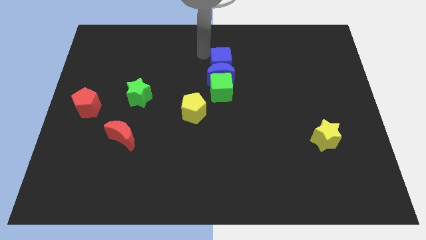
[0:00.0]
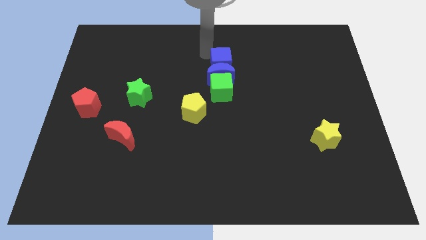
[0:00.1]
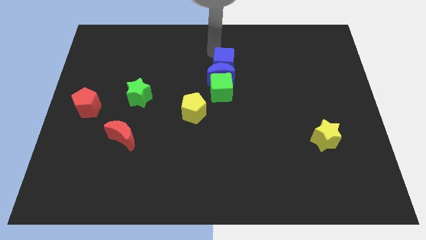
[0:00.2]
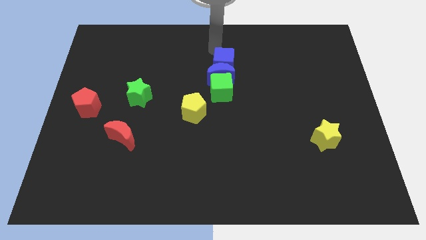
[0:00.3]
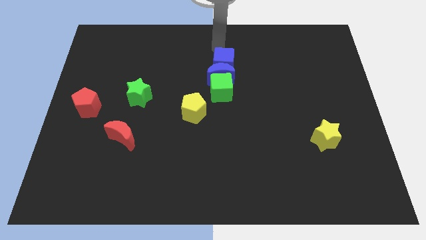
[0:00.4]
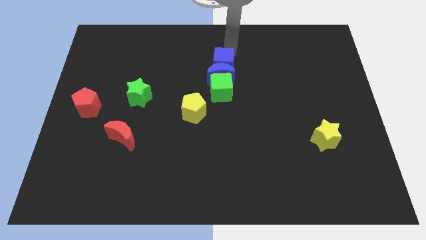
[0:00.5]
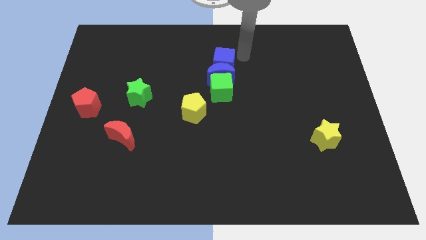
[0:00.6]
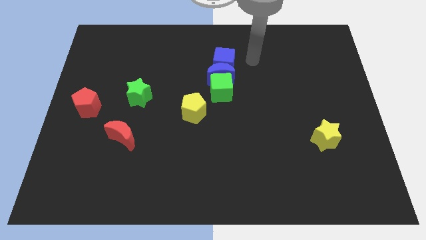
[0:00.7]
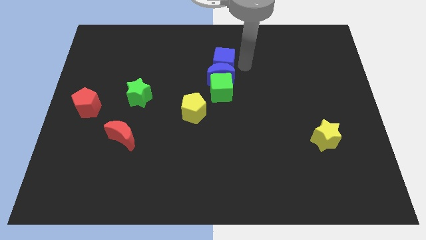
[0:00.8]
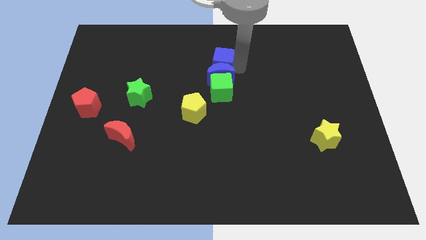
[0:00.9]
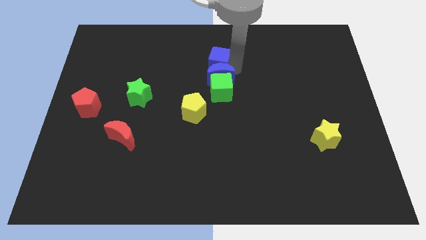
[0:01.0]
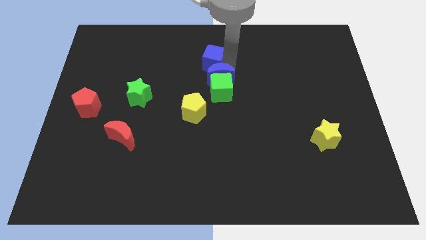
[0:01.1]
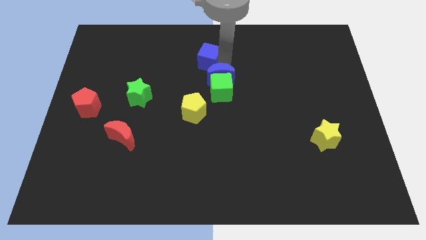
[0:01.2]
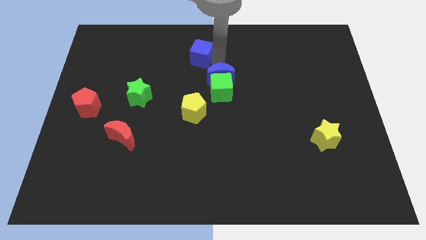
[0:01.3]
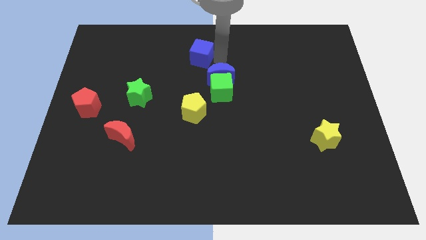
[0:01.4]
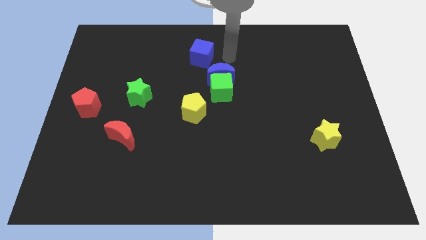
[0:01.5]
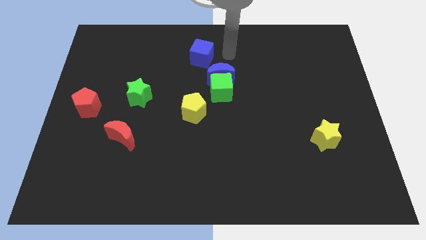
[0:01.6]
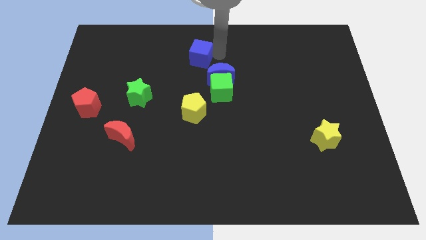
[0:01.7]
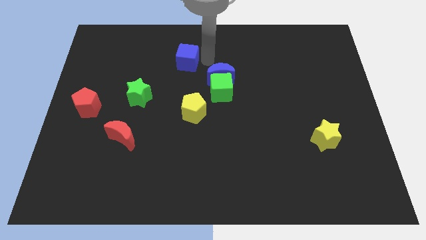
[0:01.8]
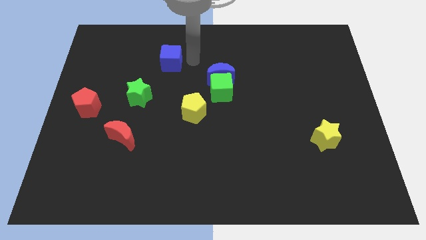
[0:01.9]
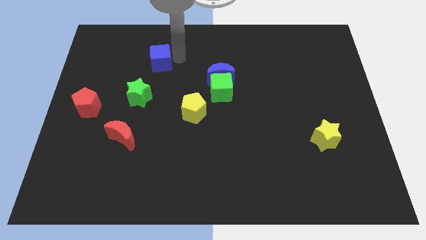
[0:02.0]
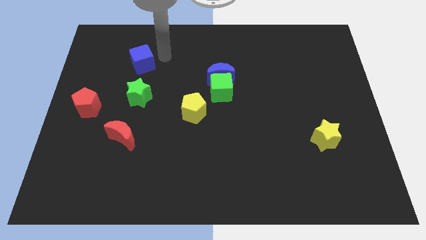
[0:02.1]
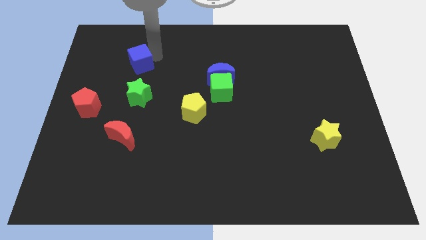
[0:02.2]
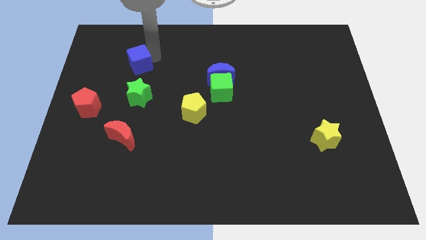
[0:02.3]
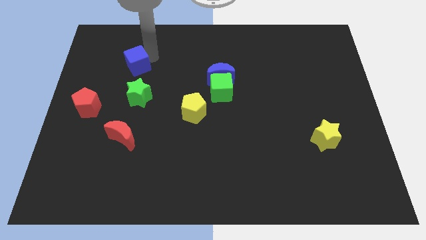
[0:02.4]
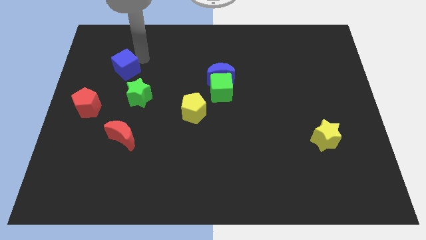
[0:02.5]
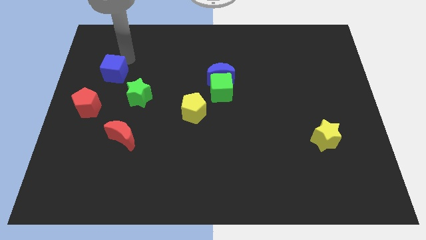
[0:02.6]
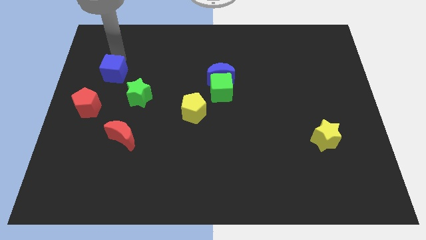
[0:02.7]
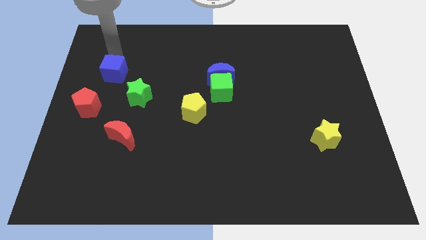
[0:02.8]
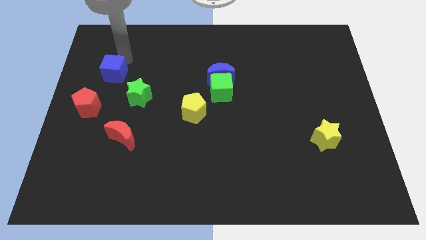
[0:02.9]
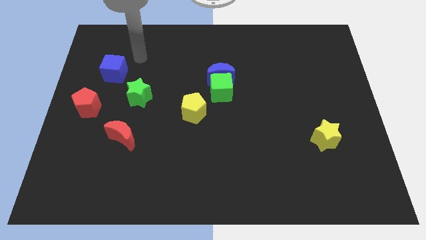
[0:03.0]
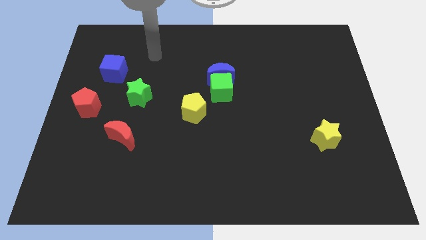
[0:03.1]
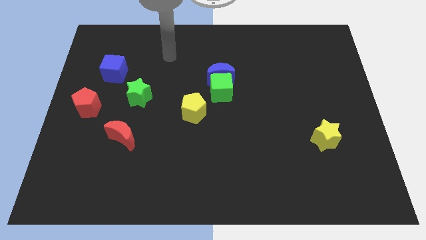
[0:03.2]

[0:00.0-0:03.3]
move the blue cube to the left of the board

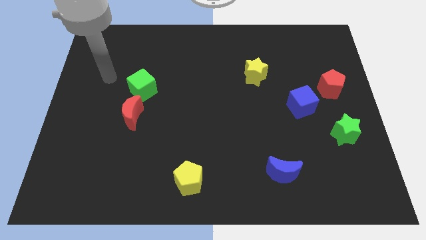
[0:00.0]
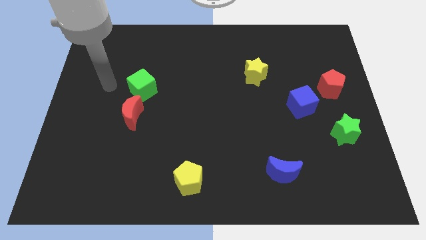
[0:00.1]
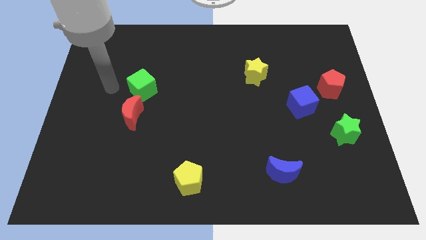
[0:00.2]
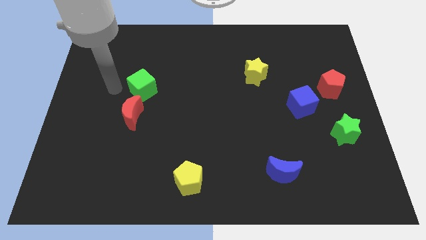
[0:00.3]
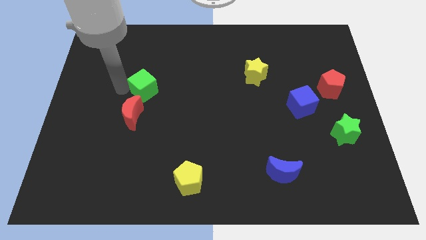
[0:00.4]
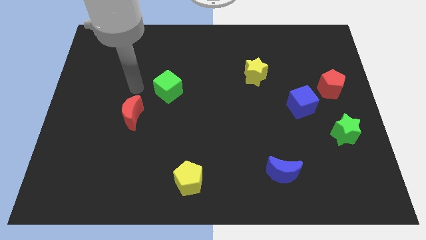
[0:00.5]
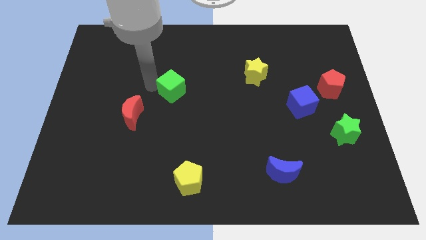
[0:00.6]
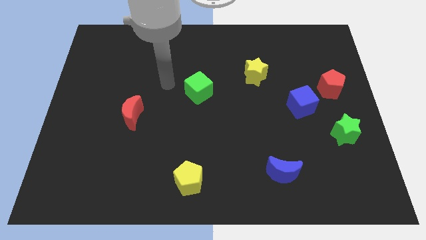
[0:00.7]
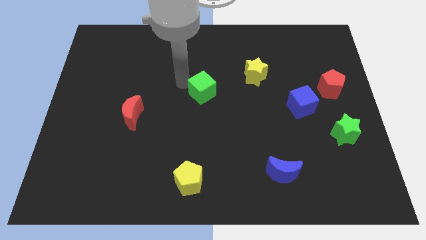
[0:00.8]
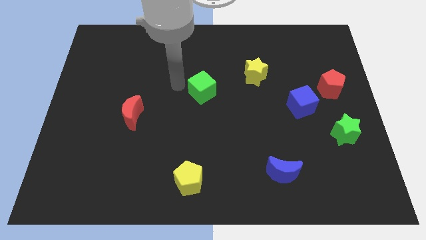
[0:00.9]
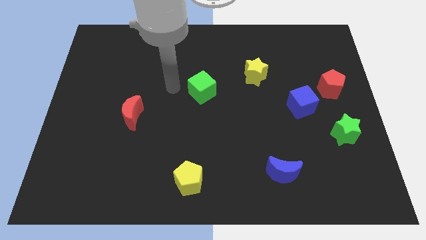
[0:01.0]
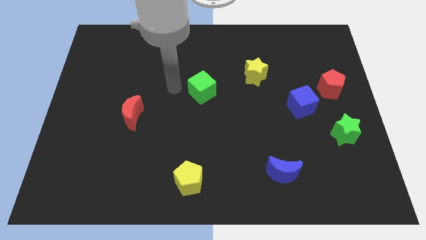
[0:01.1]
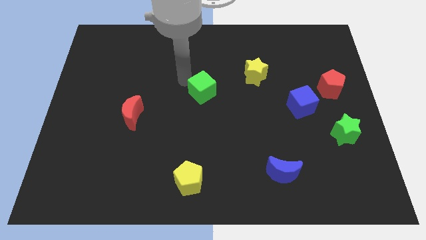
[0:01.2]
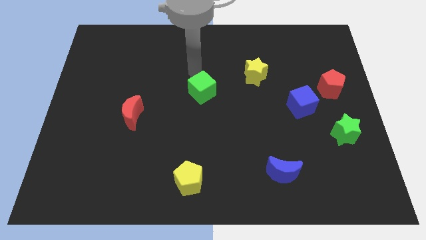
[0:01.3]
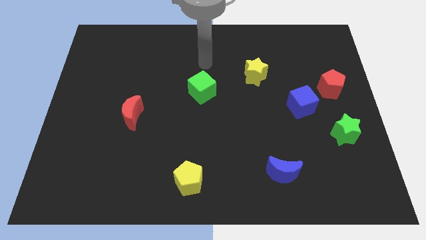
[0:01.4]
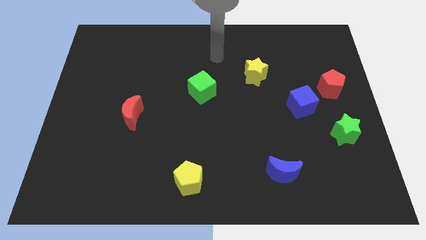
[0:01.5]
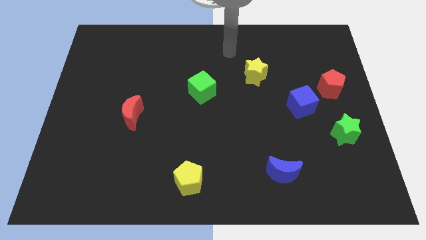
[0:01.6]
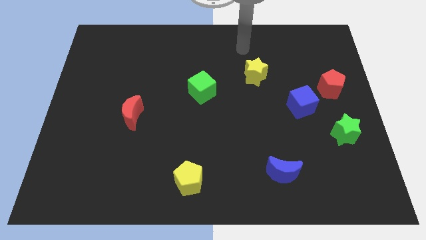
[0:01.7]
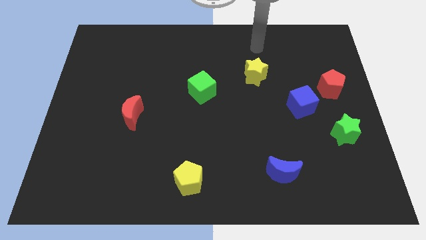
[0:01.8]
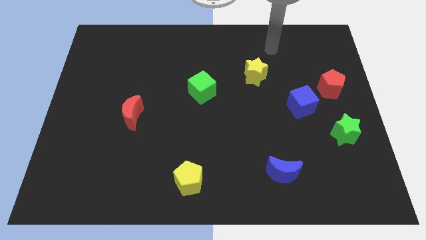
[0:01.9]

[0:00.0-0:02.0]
place the green cube between yellow star and red moon

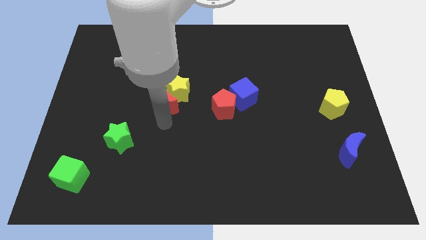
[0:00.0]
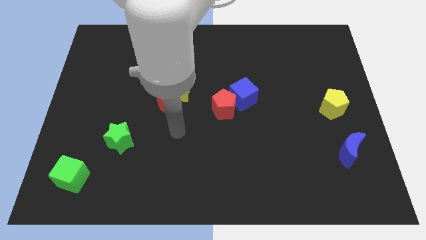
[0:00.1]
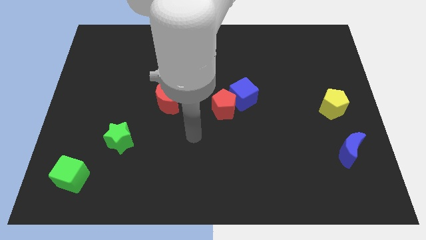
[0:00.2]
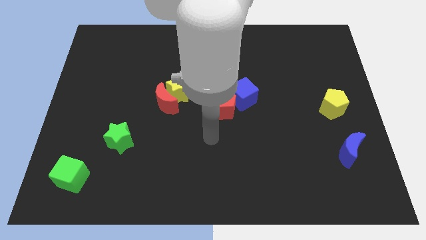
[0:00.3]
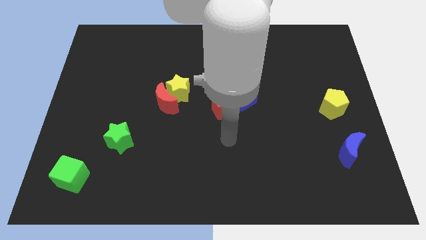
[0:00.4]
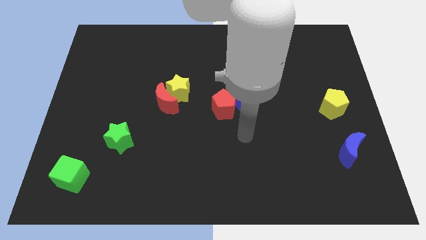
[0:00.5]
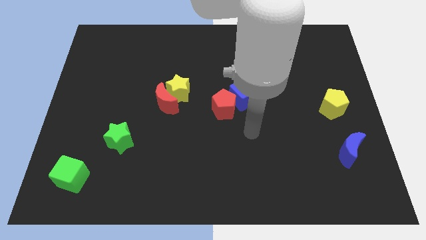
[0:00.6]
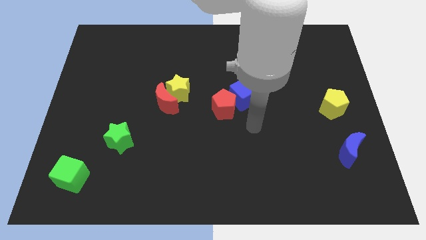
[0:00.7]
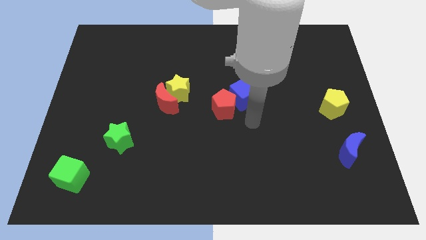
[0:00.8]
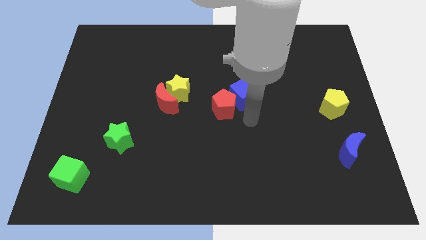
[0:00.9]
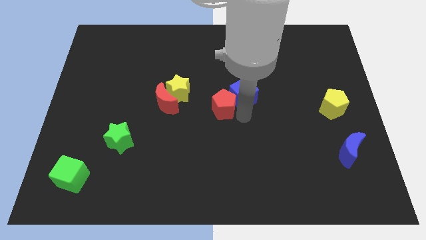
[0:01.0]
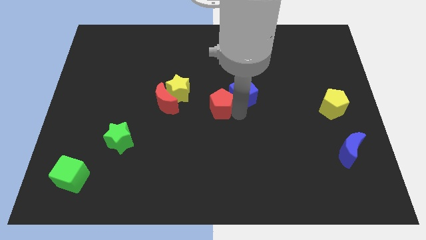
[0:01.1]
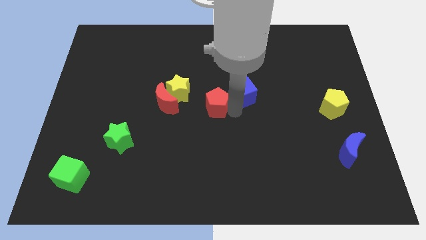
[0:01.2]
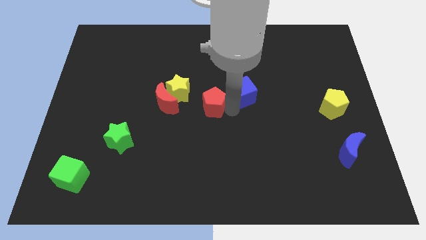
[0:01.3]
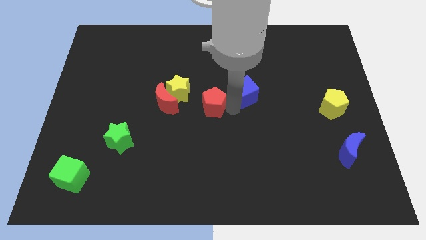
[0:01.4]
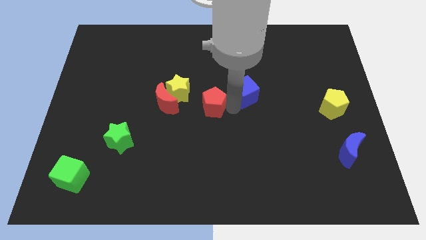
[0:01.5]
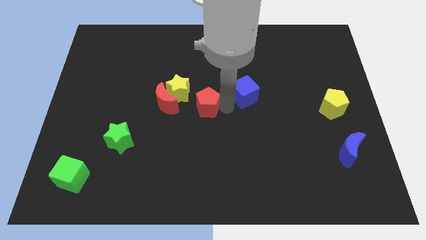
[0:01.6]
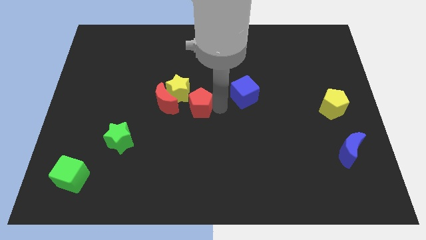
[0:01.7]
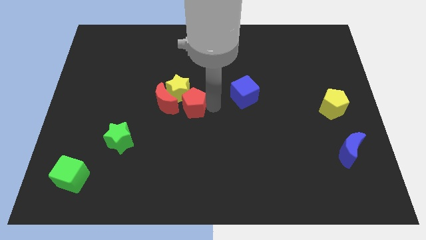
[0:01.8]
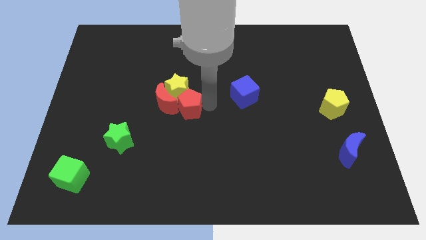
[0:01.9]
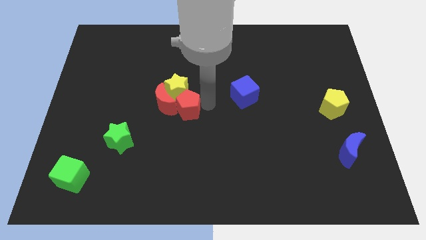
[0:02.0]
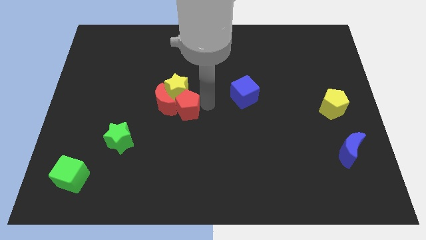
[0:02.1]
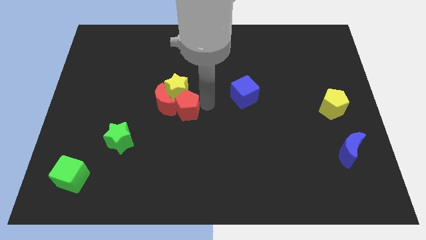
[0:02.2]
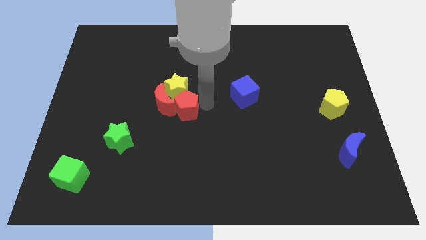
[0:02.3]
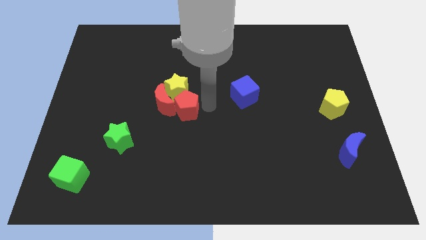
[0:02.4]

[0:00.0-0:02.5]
separate the red pentagon towards bottom of yellow star

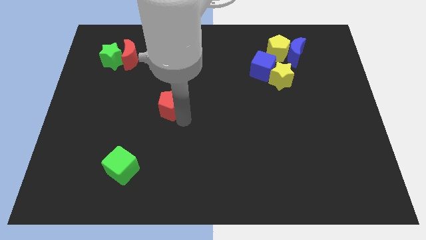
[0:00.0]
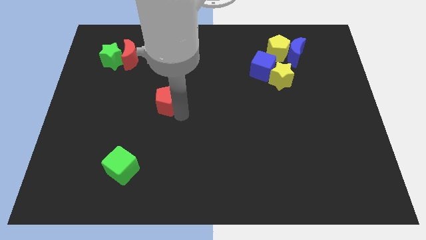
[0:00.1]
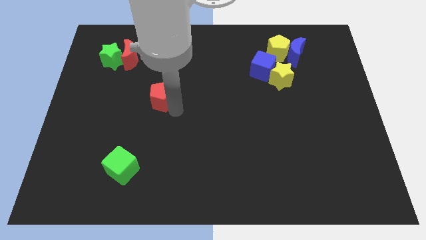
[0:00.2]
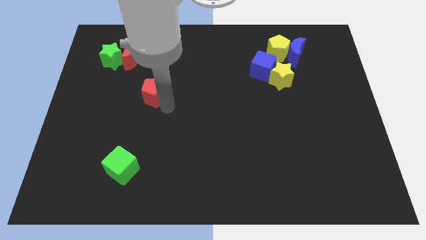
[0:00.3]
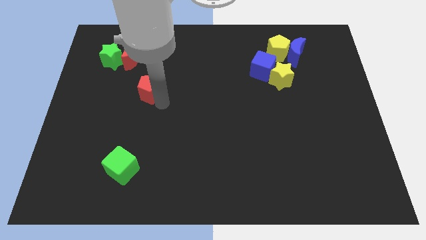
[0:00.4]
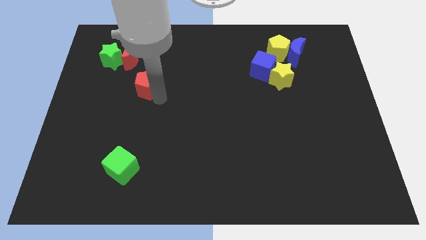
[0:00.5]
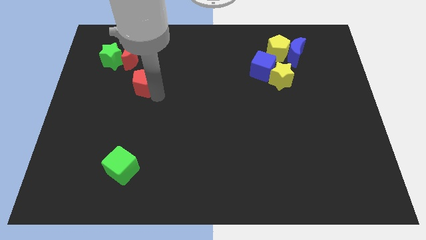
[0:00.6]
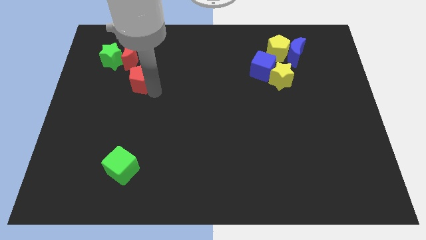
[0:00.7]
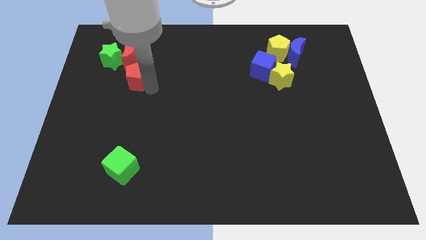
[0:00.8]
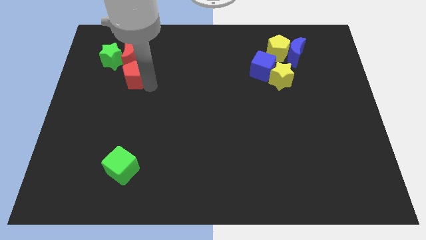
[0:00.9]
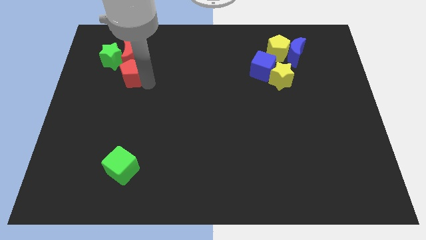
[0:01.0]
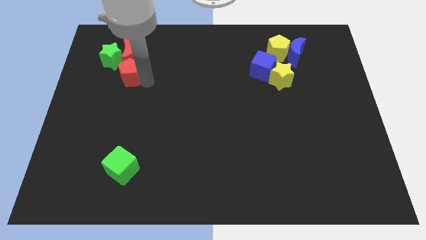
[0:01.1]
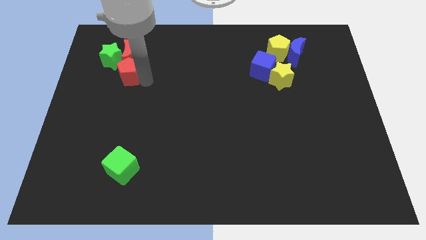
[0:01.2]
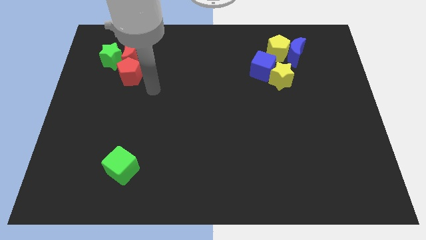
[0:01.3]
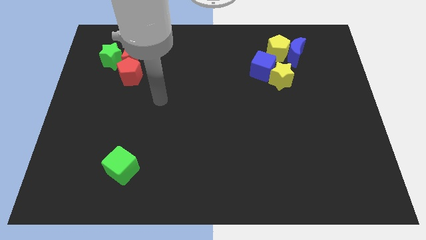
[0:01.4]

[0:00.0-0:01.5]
place the red pentagon below the red crescent
